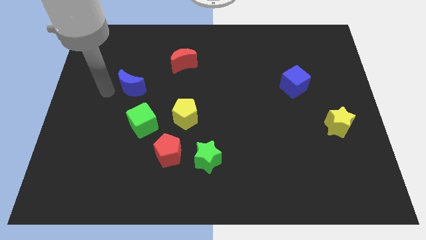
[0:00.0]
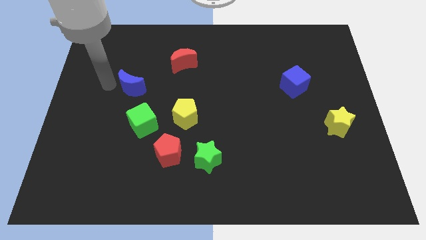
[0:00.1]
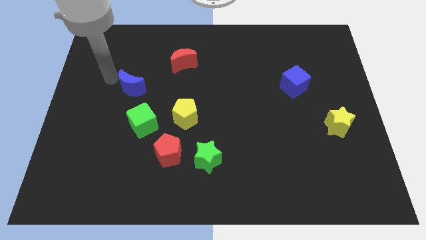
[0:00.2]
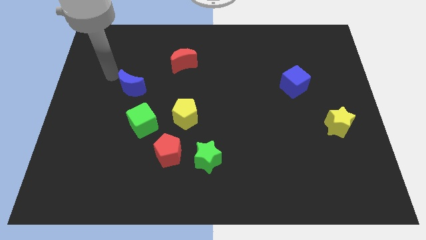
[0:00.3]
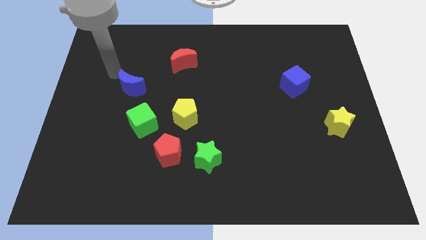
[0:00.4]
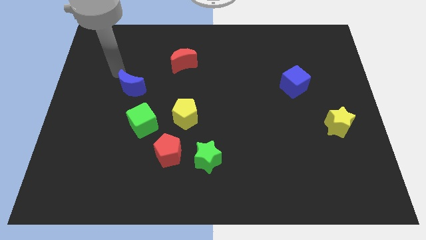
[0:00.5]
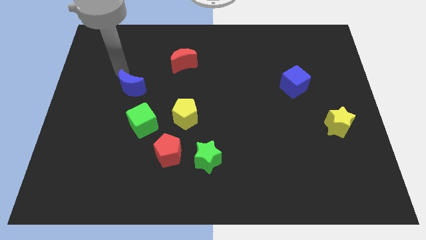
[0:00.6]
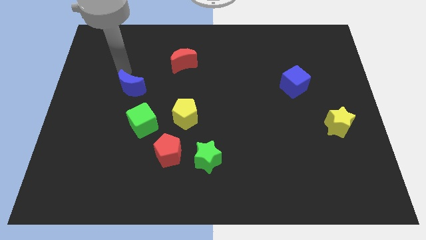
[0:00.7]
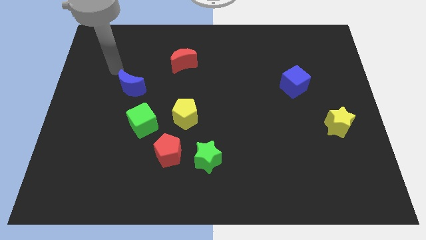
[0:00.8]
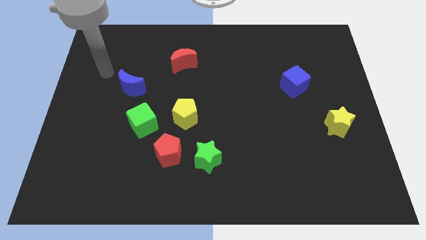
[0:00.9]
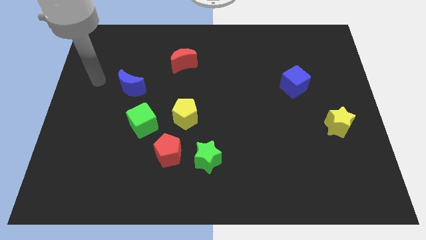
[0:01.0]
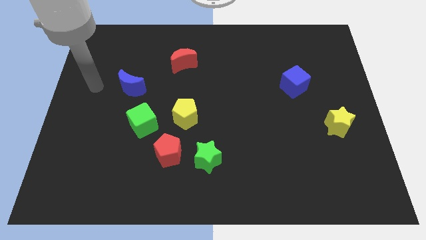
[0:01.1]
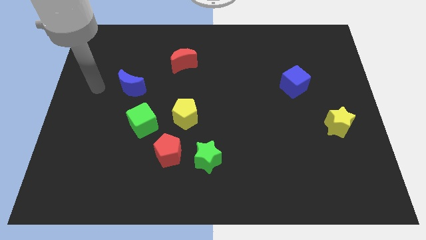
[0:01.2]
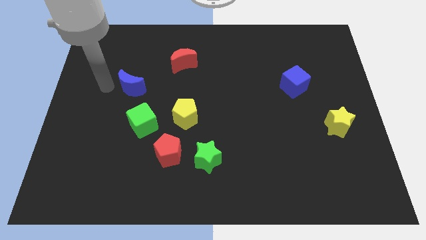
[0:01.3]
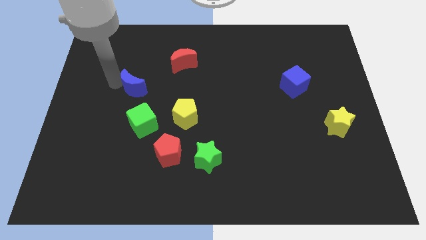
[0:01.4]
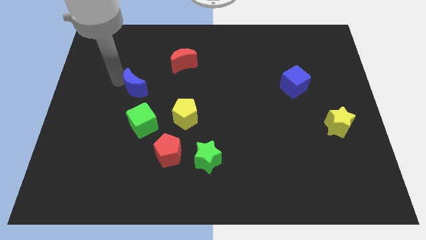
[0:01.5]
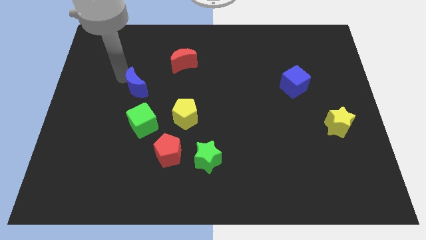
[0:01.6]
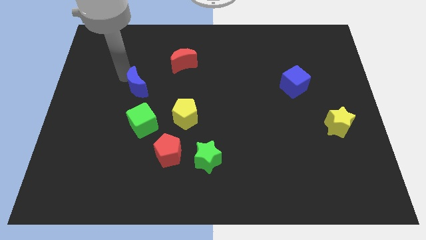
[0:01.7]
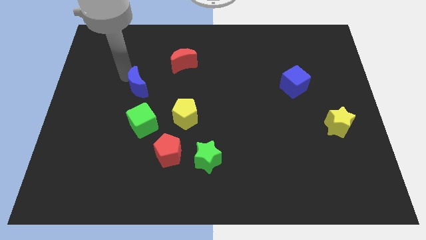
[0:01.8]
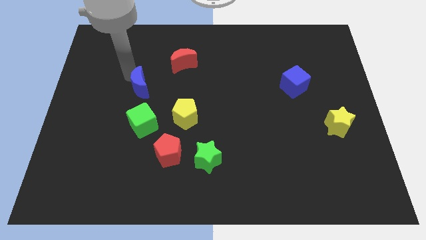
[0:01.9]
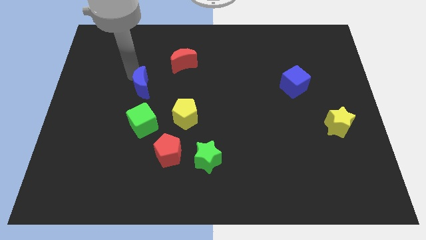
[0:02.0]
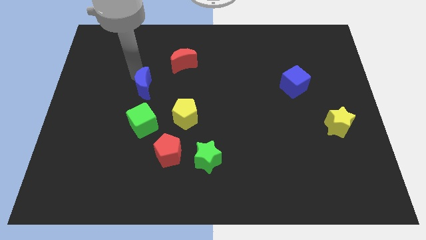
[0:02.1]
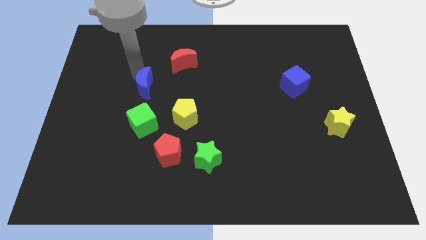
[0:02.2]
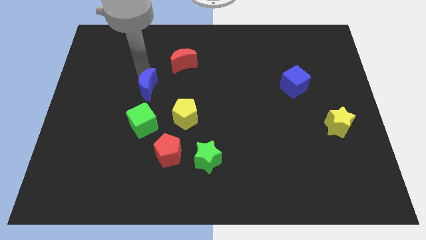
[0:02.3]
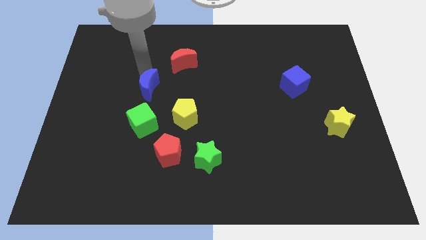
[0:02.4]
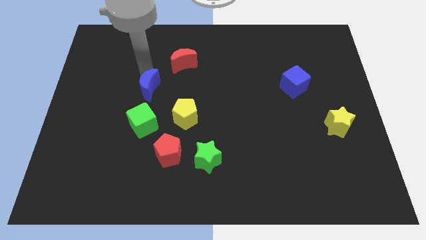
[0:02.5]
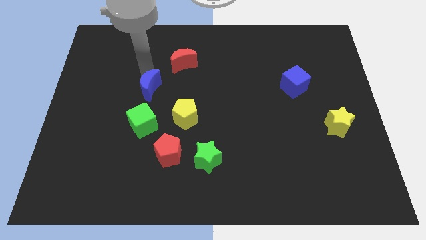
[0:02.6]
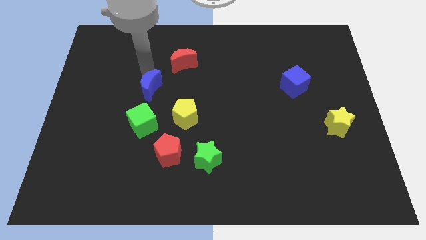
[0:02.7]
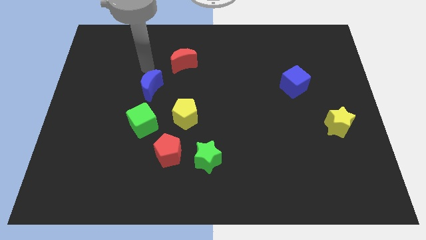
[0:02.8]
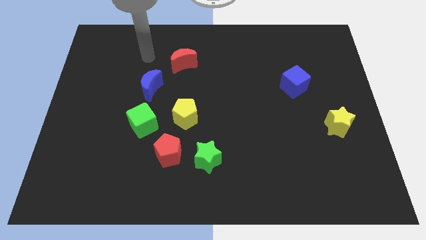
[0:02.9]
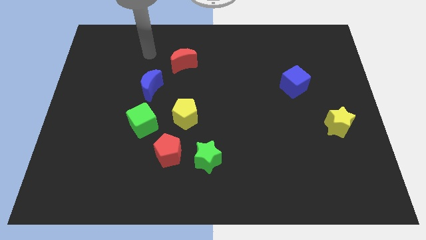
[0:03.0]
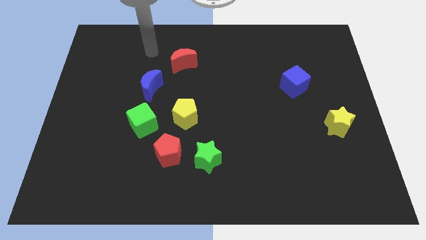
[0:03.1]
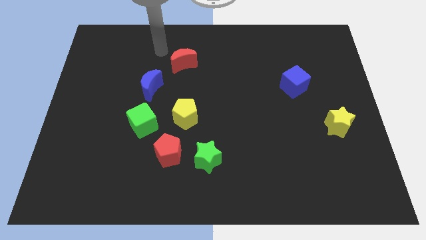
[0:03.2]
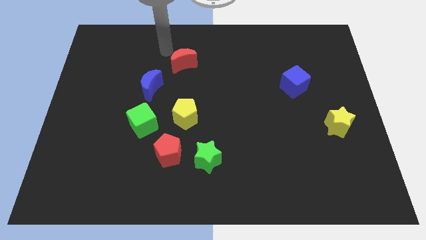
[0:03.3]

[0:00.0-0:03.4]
move the blue moon diagonally top right to green cube

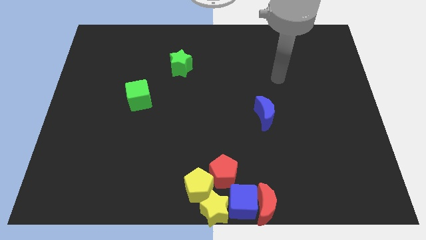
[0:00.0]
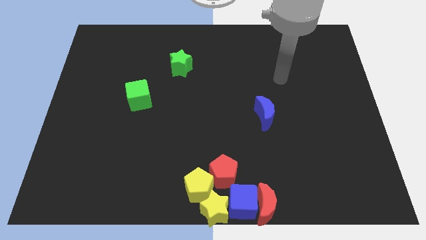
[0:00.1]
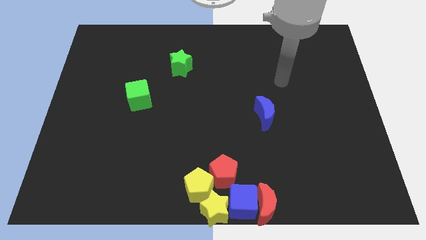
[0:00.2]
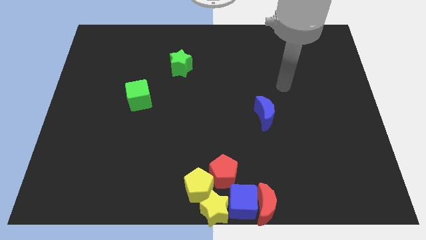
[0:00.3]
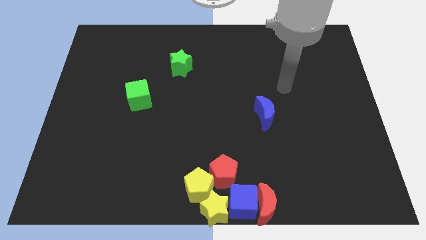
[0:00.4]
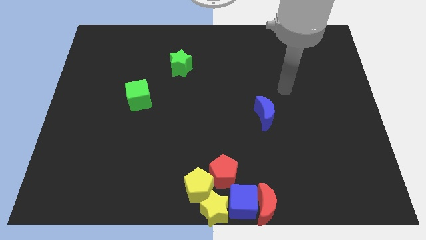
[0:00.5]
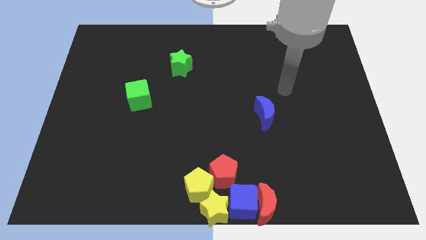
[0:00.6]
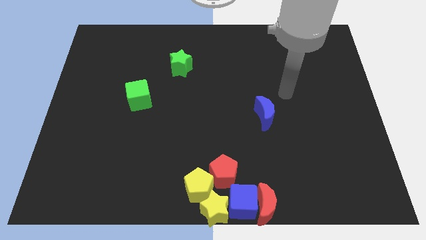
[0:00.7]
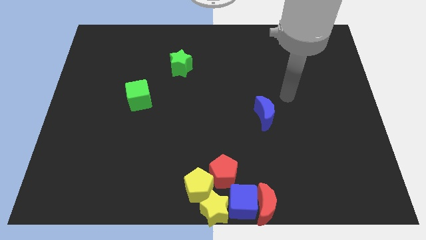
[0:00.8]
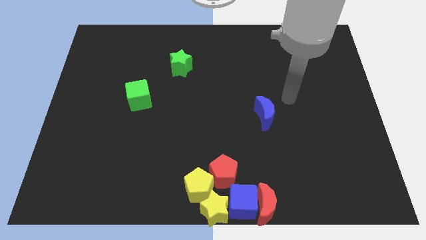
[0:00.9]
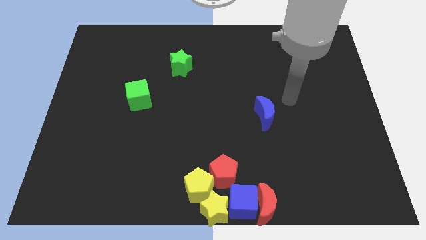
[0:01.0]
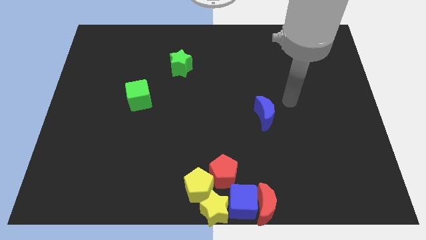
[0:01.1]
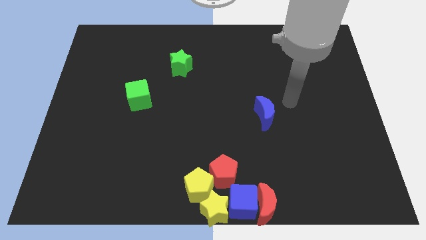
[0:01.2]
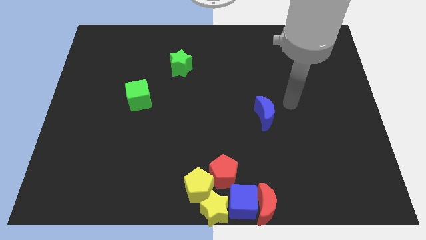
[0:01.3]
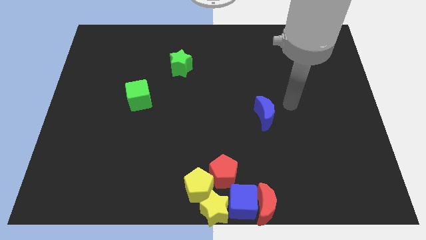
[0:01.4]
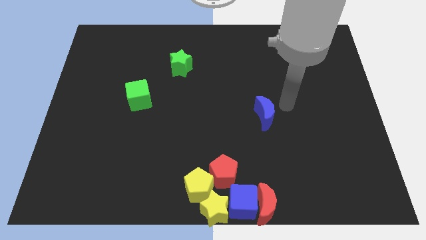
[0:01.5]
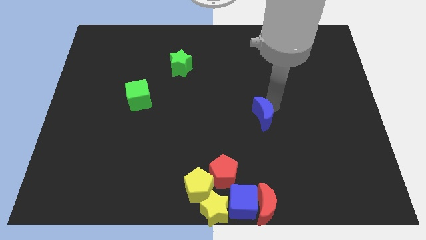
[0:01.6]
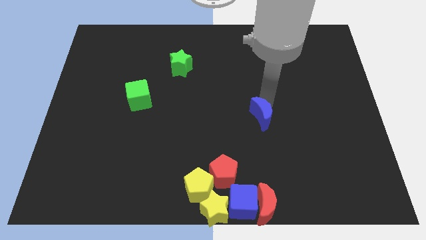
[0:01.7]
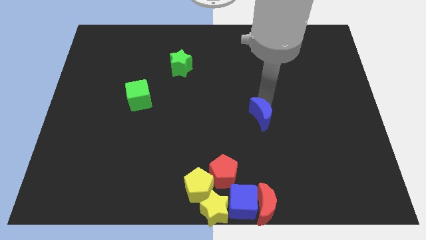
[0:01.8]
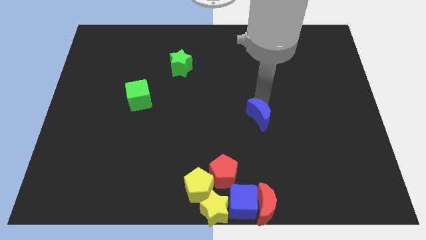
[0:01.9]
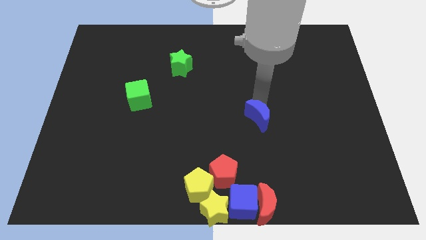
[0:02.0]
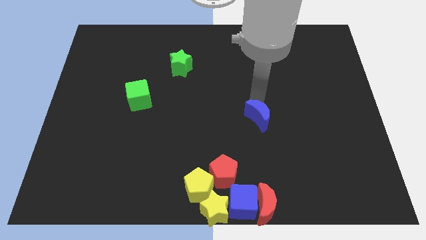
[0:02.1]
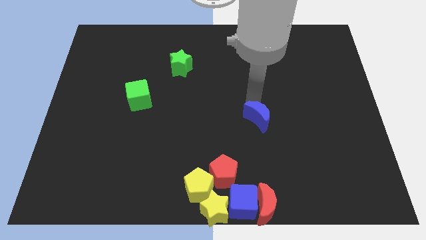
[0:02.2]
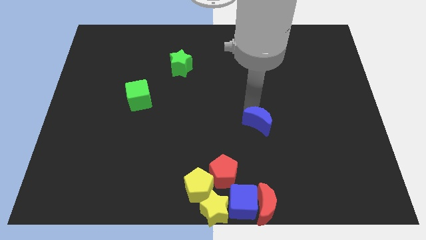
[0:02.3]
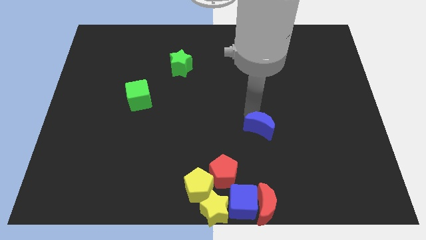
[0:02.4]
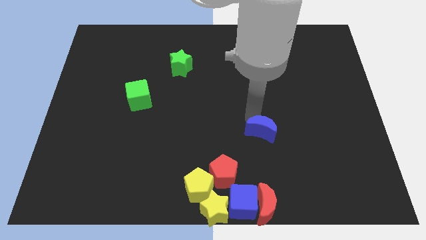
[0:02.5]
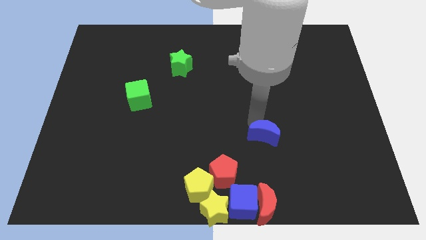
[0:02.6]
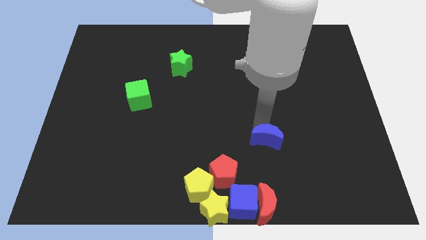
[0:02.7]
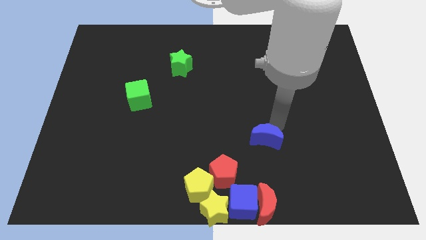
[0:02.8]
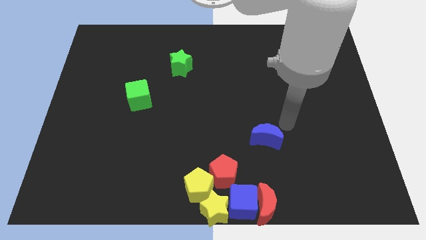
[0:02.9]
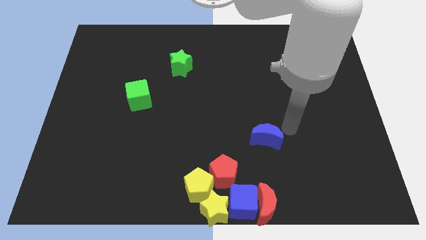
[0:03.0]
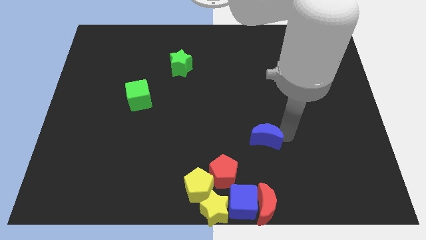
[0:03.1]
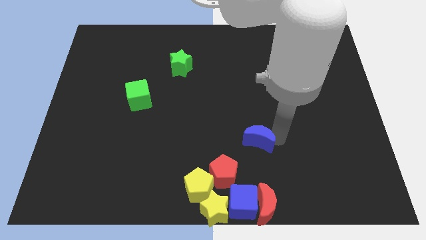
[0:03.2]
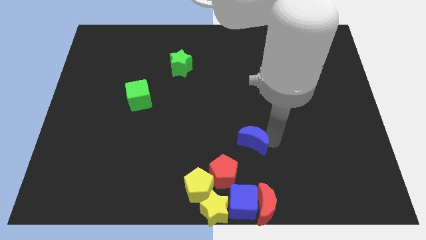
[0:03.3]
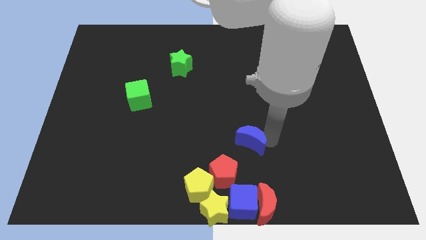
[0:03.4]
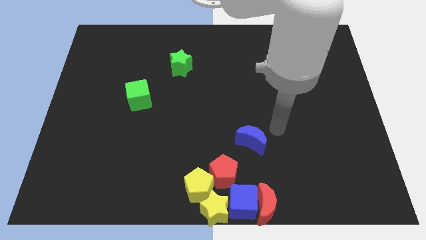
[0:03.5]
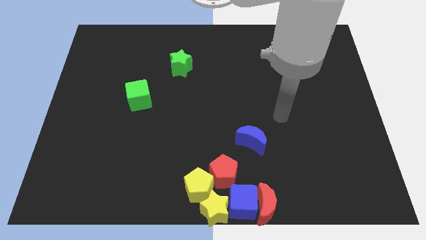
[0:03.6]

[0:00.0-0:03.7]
move the blue moon towards the red pentagon

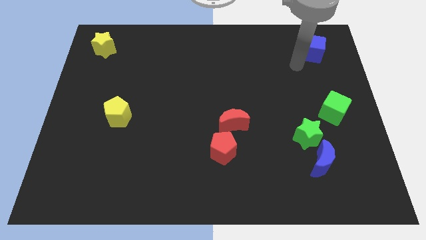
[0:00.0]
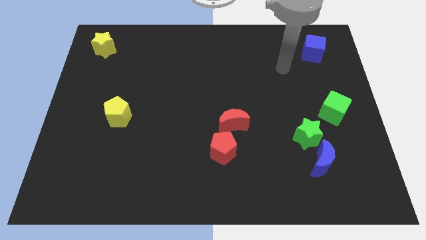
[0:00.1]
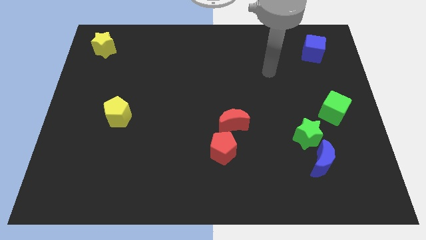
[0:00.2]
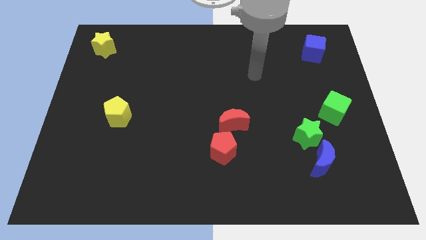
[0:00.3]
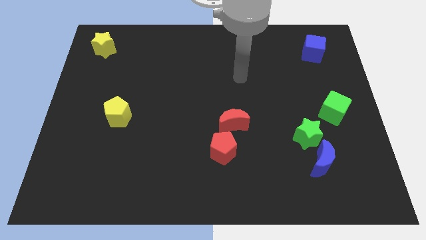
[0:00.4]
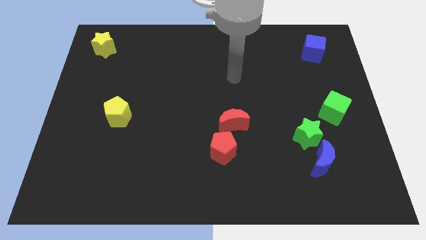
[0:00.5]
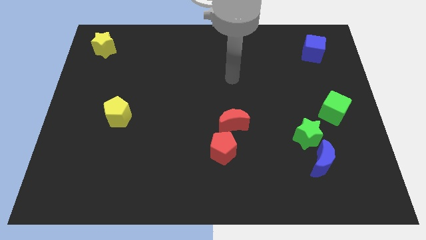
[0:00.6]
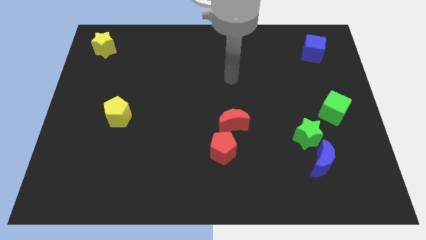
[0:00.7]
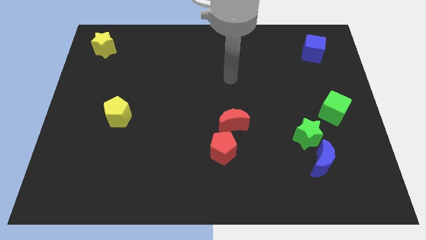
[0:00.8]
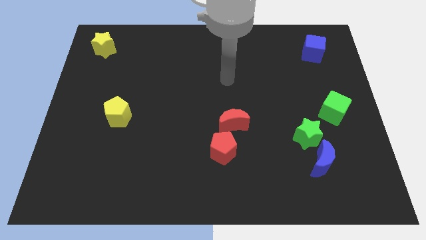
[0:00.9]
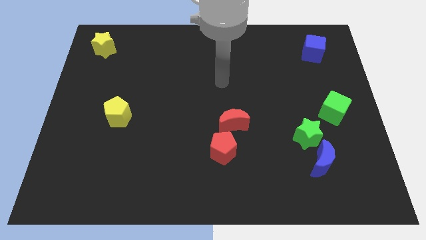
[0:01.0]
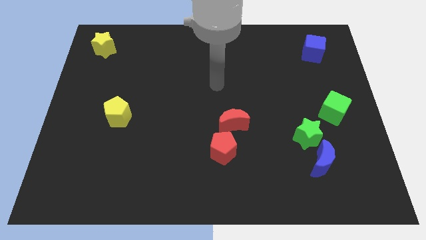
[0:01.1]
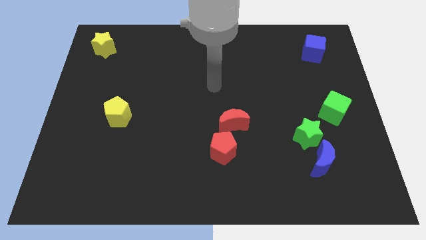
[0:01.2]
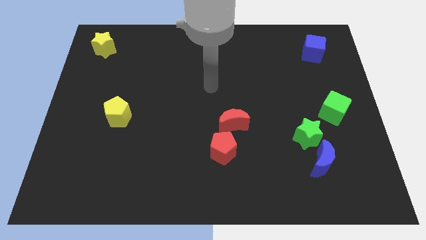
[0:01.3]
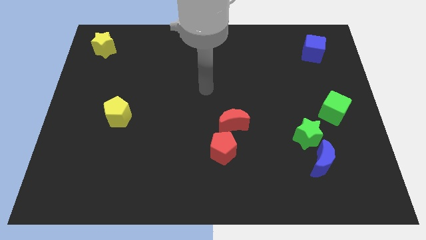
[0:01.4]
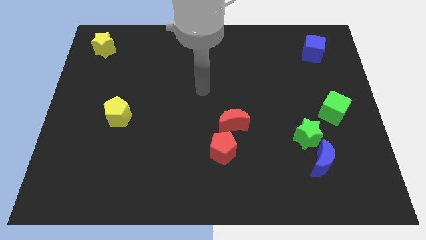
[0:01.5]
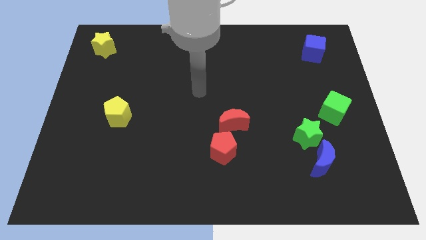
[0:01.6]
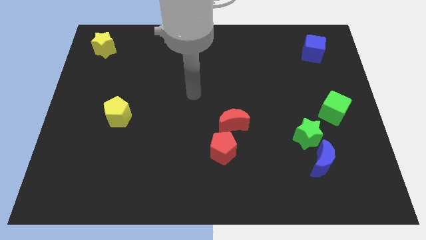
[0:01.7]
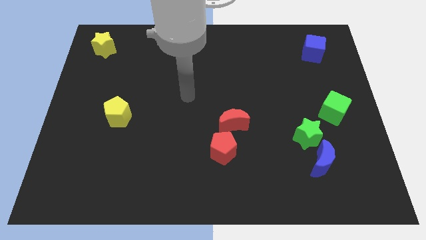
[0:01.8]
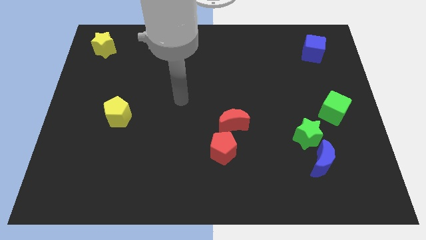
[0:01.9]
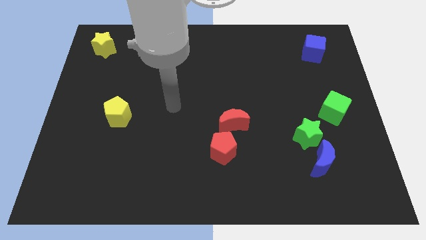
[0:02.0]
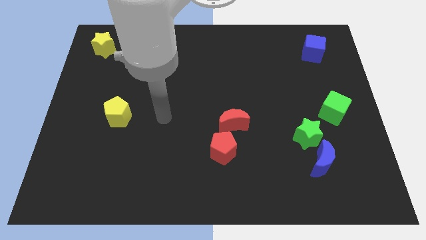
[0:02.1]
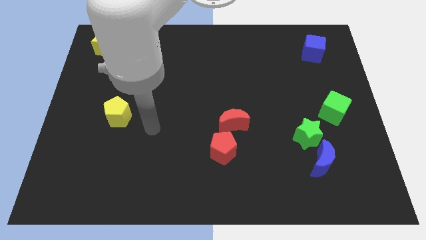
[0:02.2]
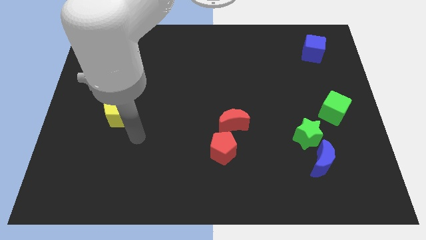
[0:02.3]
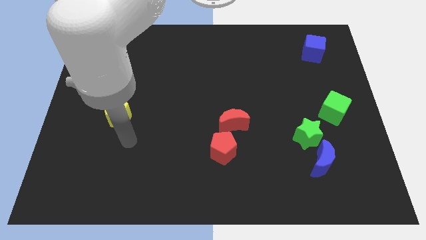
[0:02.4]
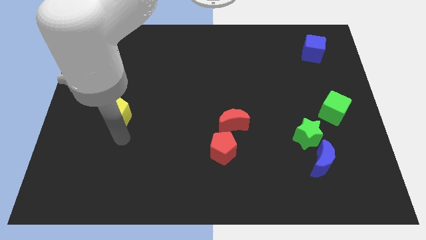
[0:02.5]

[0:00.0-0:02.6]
place the arm below the yellow pentagon
